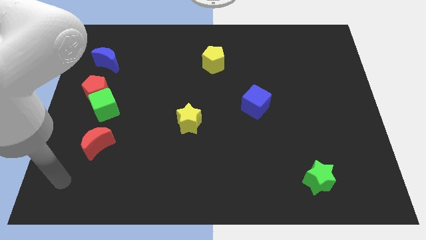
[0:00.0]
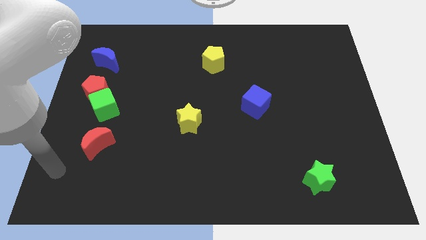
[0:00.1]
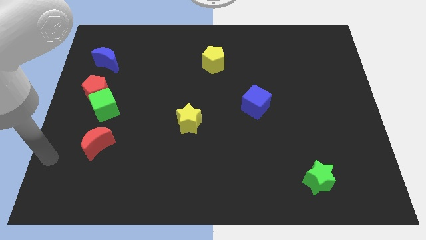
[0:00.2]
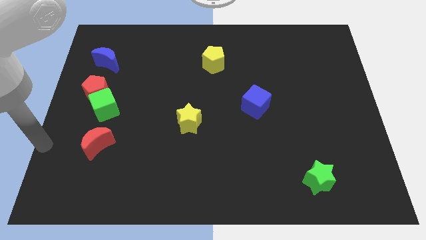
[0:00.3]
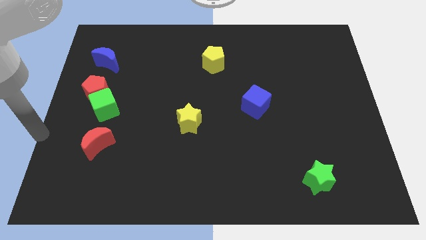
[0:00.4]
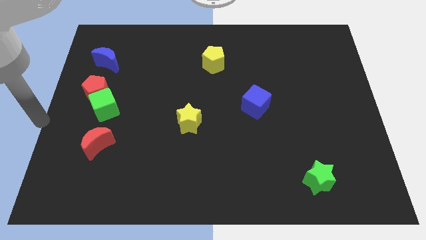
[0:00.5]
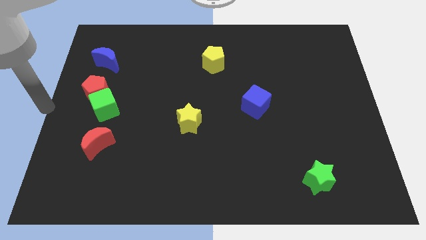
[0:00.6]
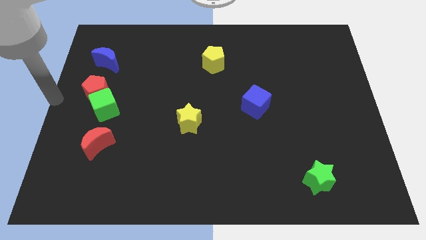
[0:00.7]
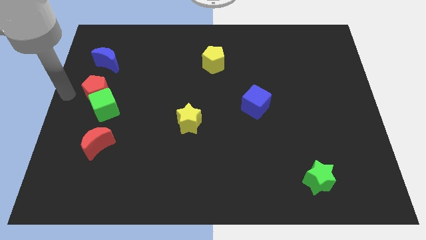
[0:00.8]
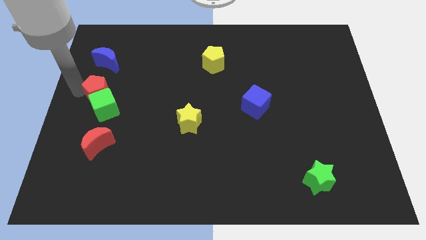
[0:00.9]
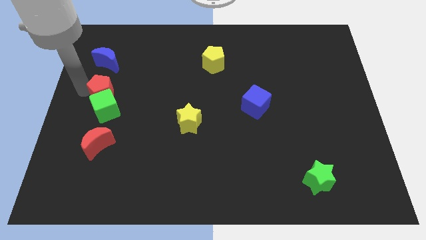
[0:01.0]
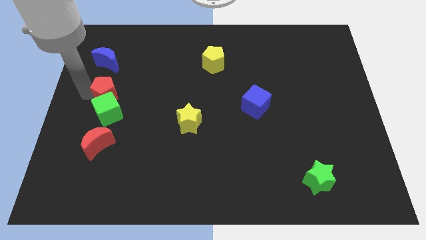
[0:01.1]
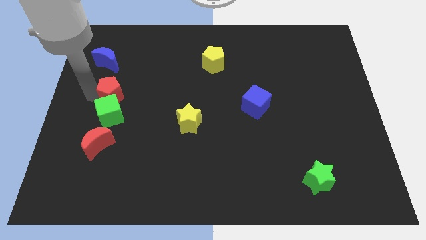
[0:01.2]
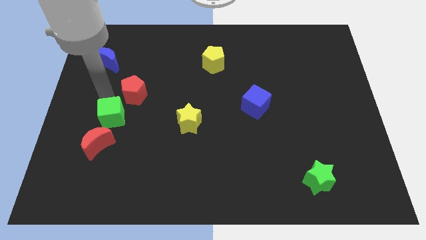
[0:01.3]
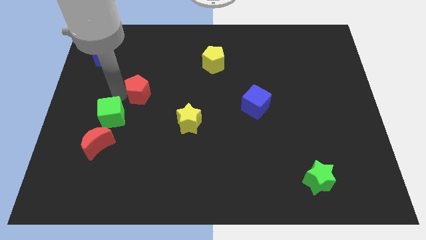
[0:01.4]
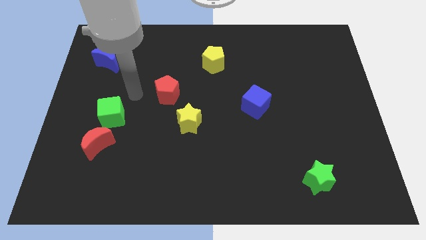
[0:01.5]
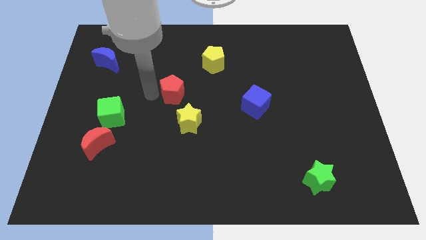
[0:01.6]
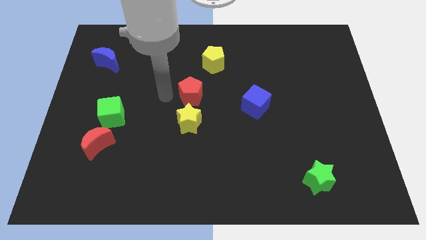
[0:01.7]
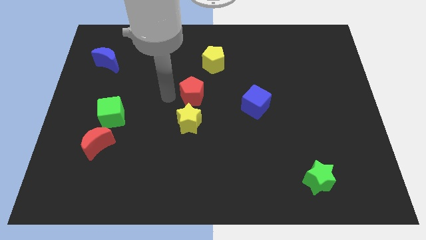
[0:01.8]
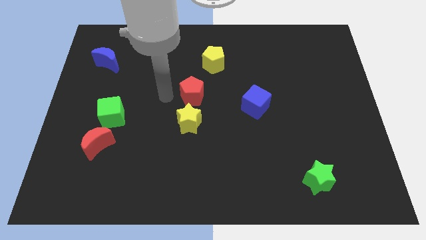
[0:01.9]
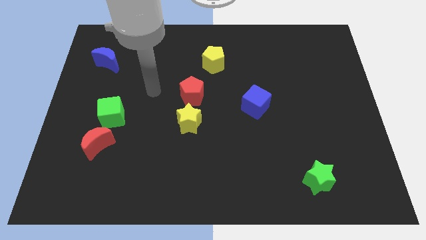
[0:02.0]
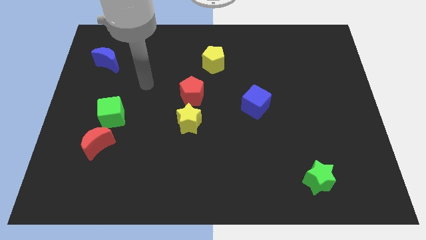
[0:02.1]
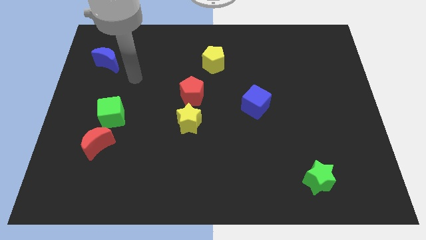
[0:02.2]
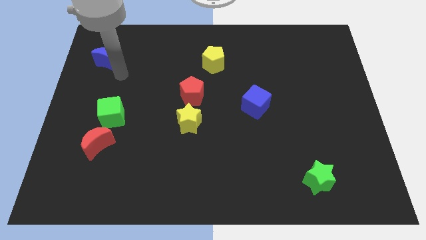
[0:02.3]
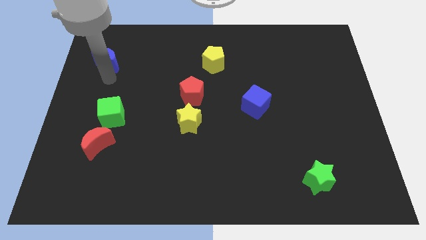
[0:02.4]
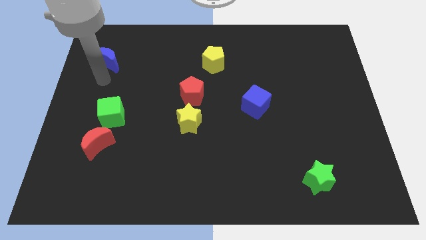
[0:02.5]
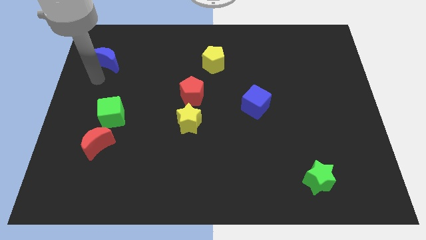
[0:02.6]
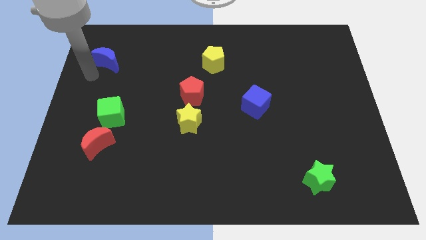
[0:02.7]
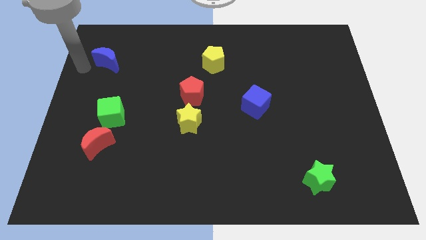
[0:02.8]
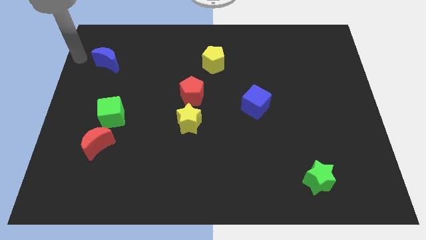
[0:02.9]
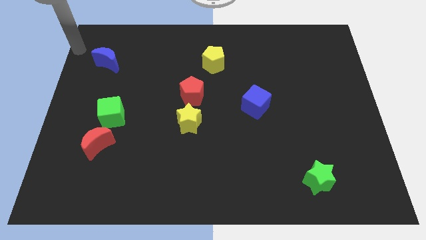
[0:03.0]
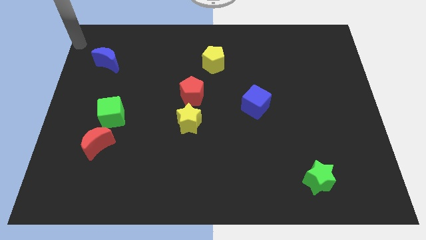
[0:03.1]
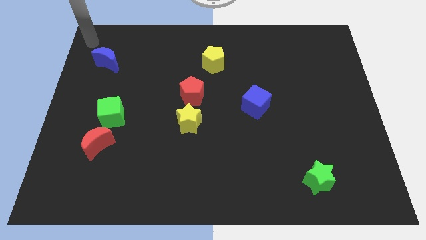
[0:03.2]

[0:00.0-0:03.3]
place the red pentagon above the yellow star

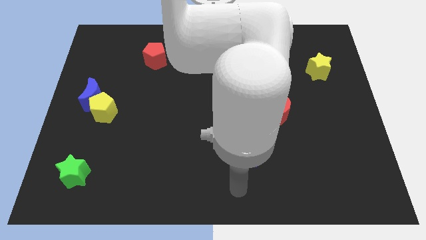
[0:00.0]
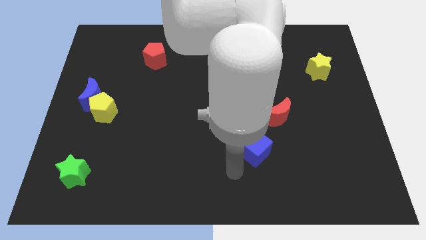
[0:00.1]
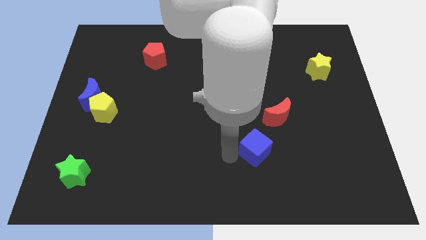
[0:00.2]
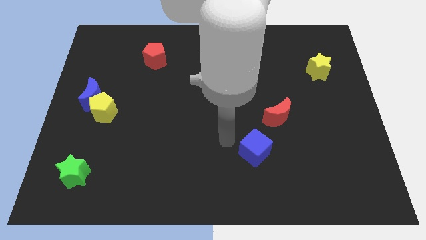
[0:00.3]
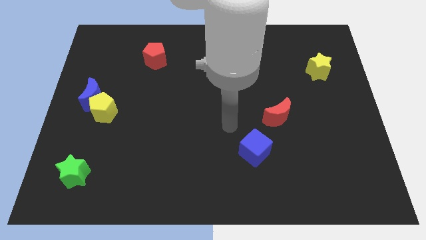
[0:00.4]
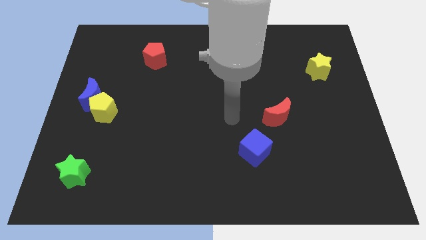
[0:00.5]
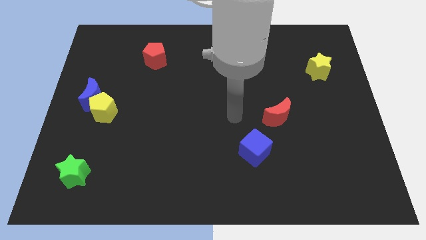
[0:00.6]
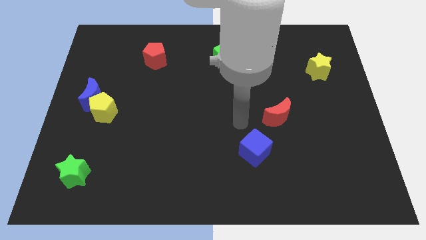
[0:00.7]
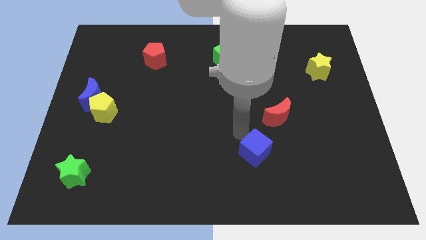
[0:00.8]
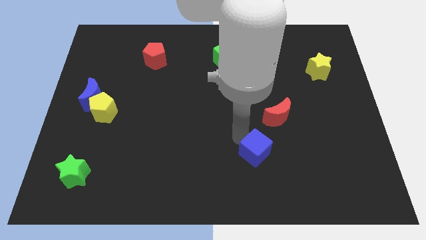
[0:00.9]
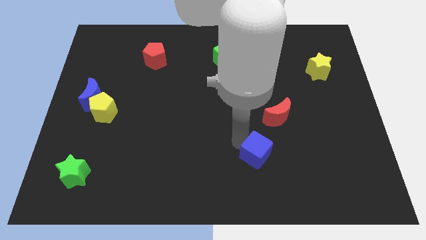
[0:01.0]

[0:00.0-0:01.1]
move your arm top left to the blue cube

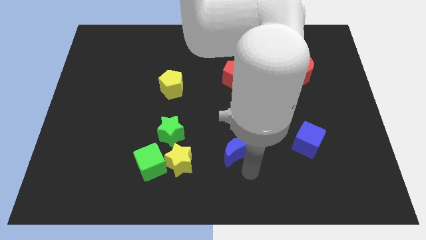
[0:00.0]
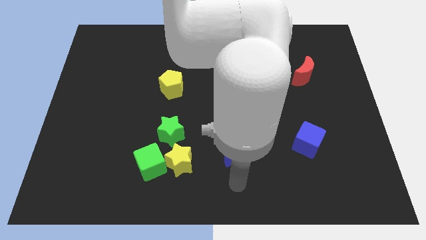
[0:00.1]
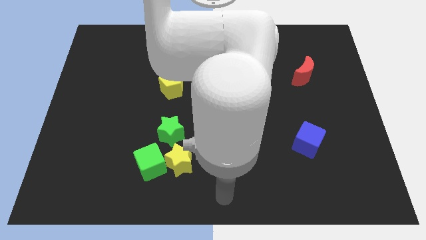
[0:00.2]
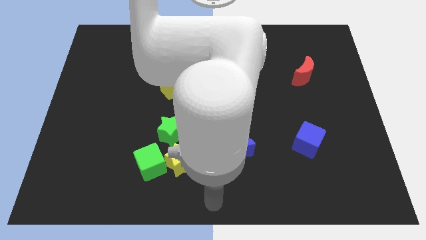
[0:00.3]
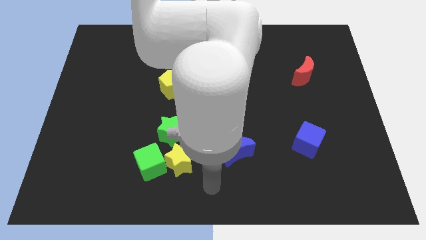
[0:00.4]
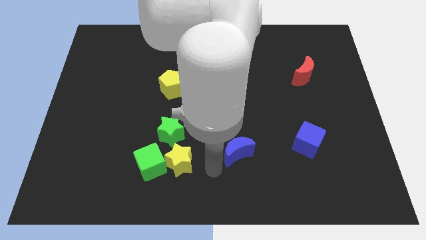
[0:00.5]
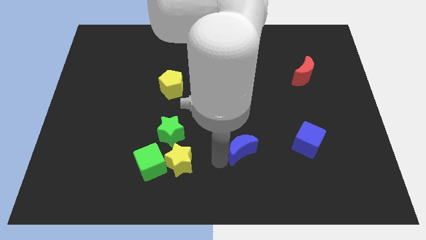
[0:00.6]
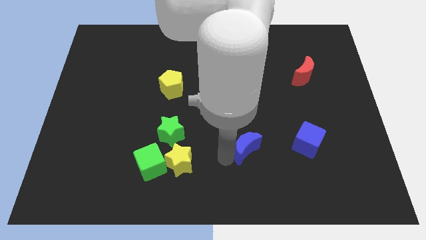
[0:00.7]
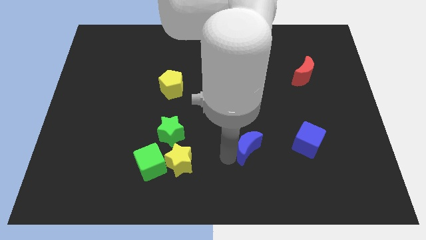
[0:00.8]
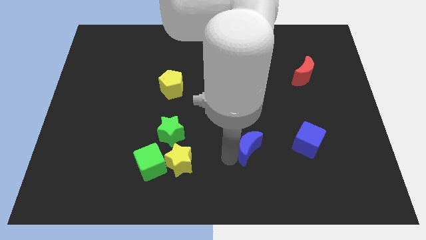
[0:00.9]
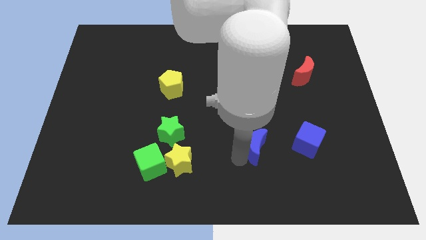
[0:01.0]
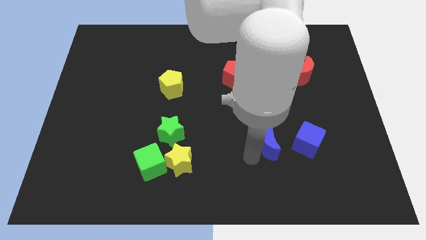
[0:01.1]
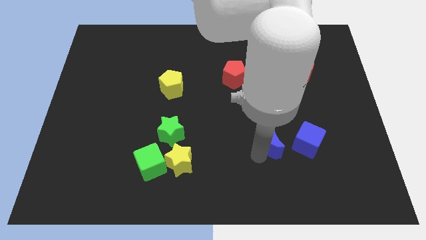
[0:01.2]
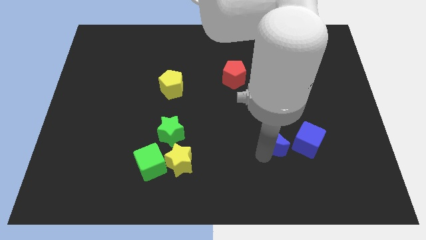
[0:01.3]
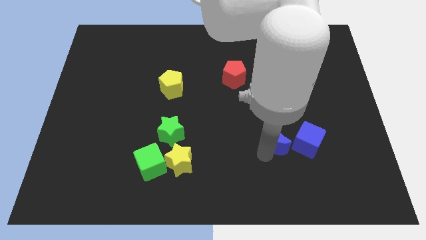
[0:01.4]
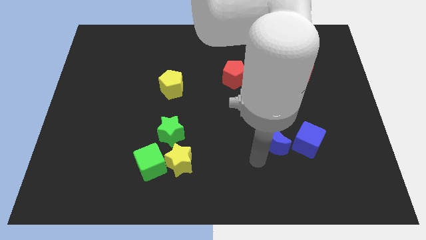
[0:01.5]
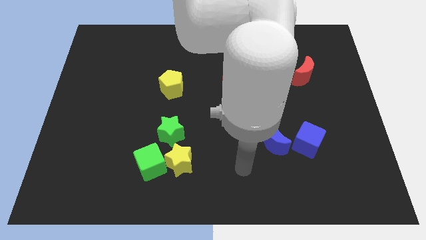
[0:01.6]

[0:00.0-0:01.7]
move the blue moon close to the blue cube

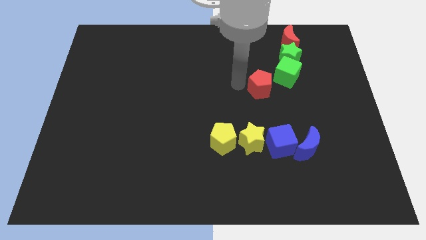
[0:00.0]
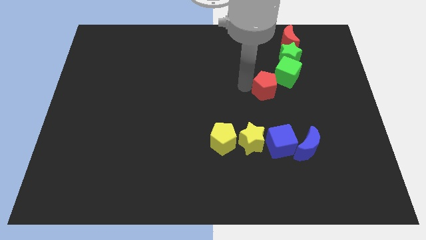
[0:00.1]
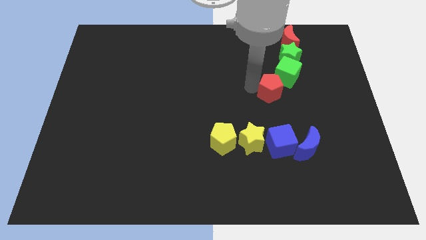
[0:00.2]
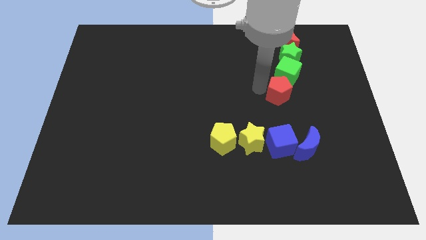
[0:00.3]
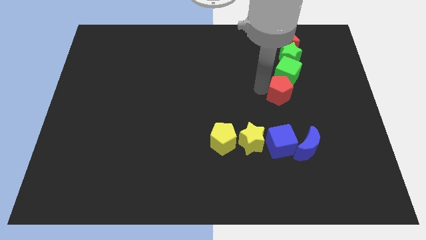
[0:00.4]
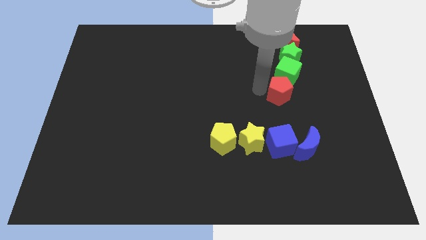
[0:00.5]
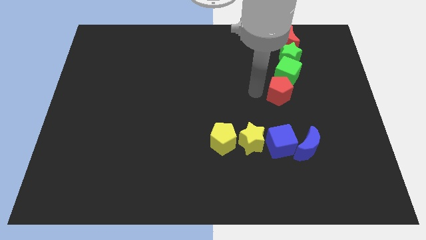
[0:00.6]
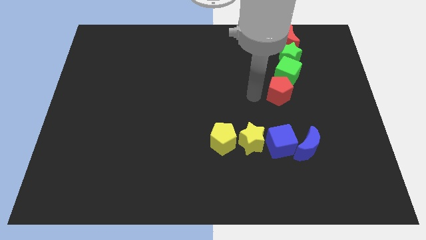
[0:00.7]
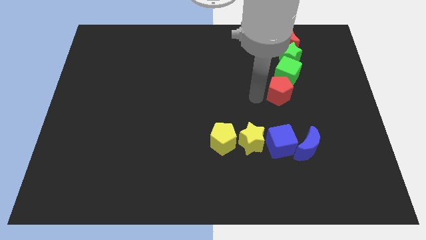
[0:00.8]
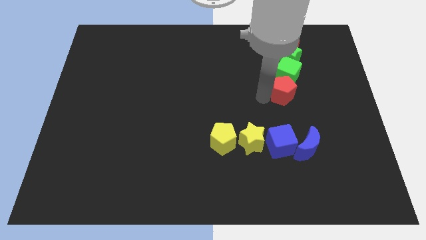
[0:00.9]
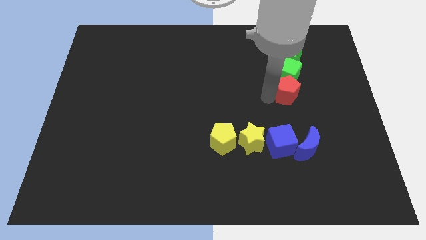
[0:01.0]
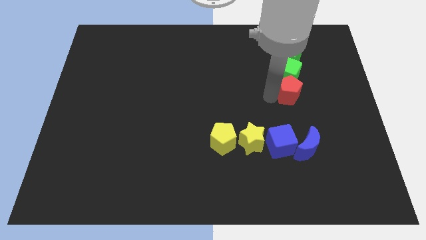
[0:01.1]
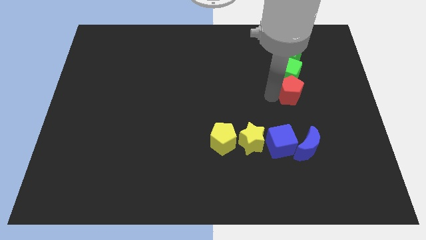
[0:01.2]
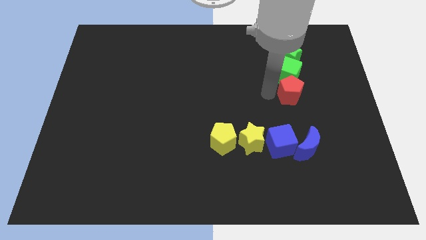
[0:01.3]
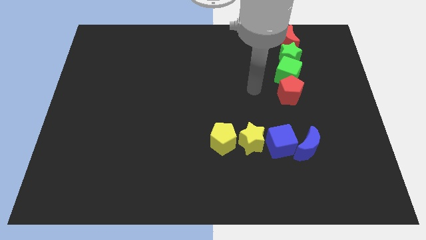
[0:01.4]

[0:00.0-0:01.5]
place the red pentagon to the bottom of the green cube

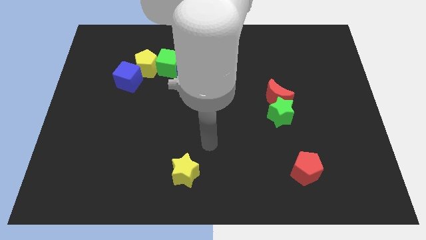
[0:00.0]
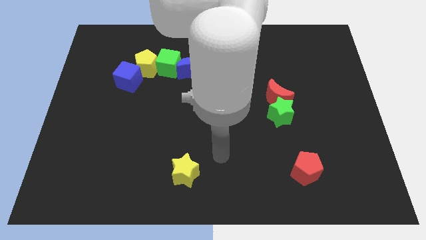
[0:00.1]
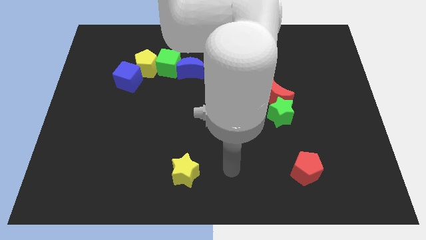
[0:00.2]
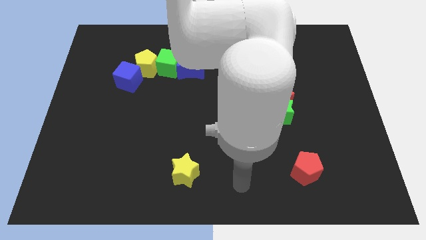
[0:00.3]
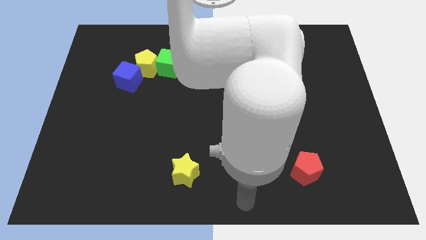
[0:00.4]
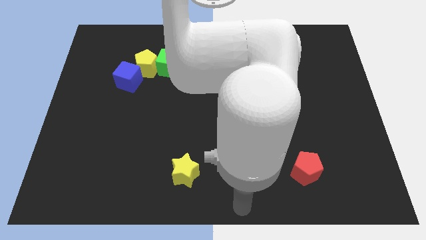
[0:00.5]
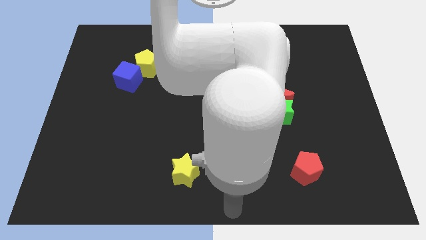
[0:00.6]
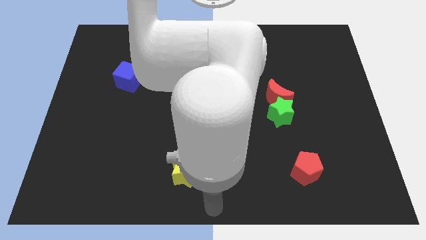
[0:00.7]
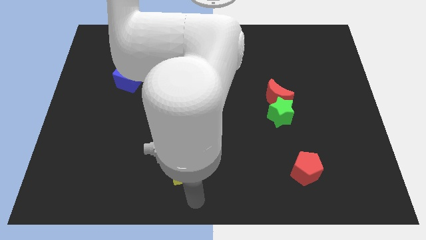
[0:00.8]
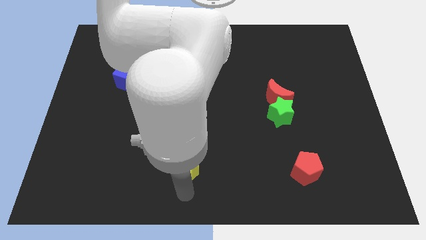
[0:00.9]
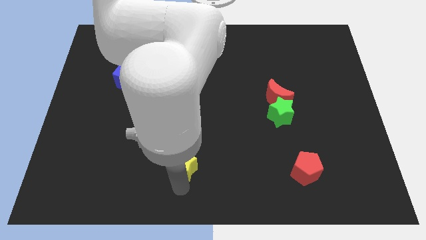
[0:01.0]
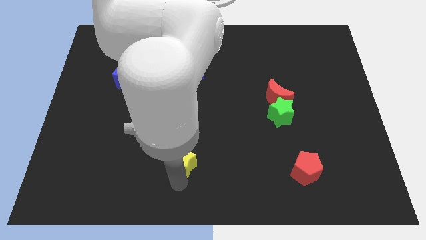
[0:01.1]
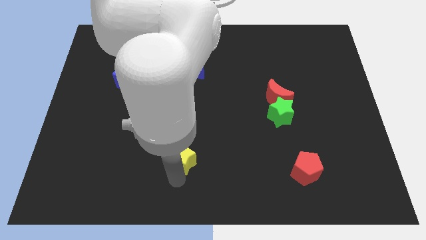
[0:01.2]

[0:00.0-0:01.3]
move the arm near to the yellow star
